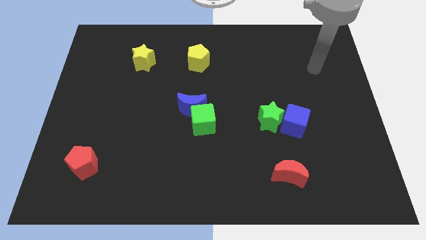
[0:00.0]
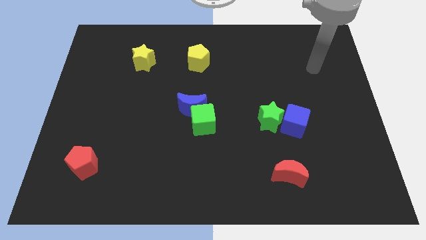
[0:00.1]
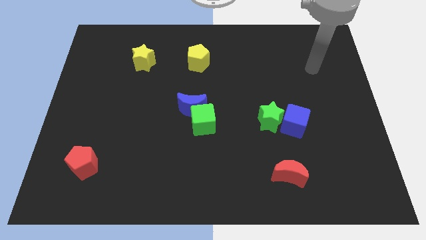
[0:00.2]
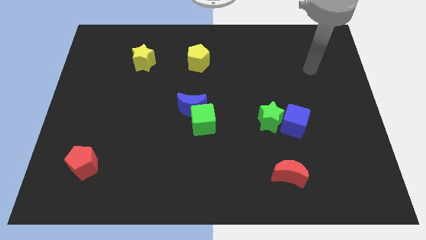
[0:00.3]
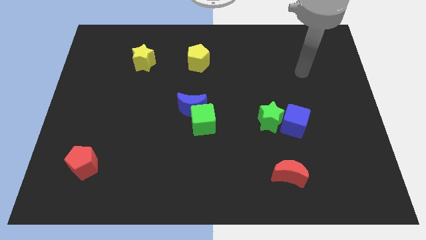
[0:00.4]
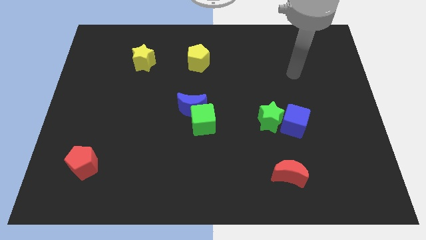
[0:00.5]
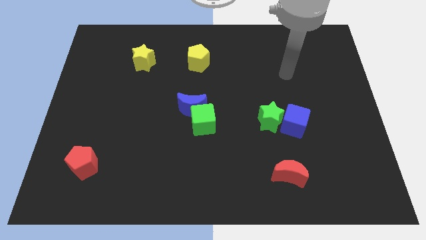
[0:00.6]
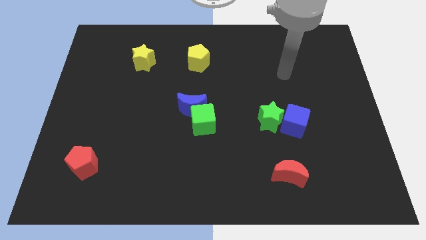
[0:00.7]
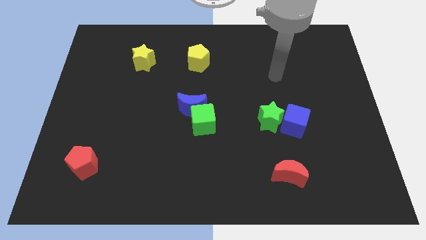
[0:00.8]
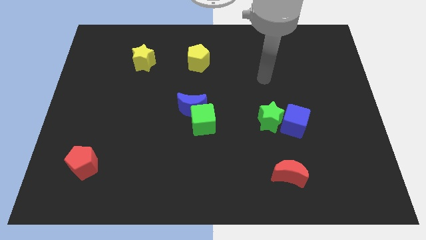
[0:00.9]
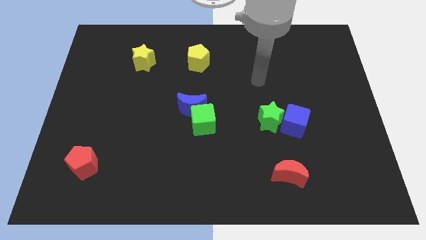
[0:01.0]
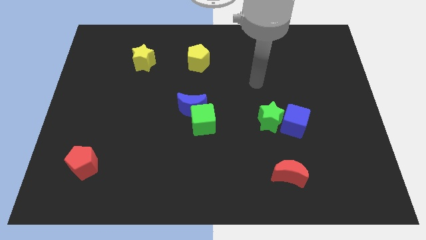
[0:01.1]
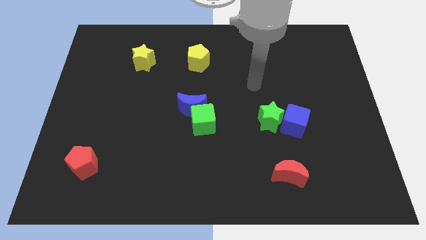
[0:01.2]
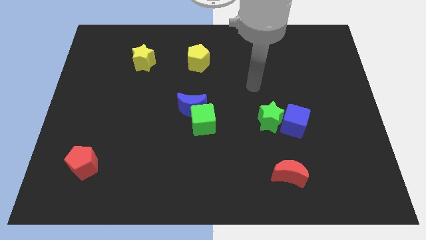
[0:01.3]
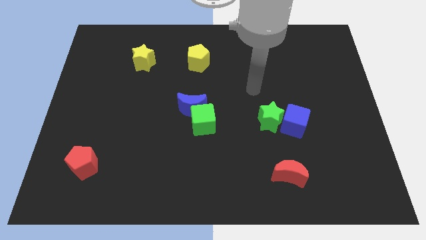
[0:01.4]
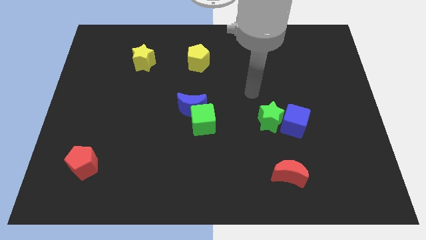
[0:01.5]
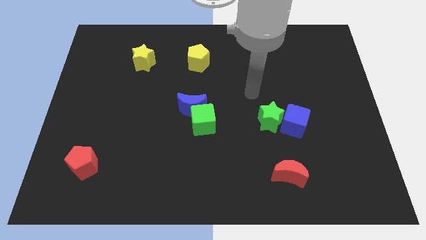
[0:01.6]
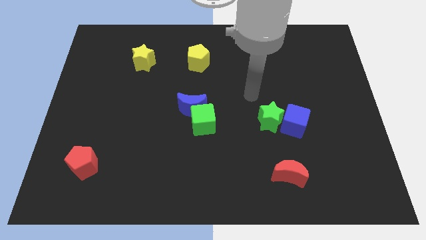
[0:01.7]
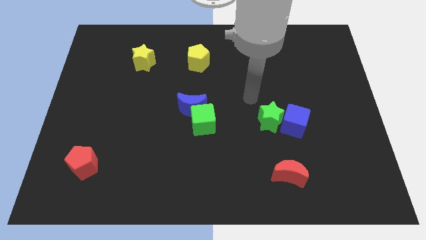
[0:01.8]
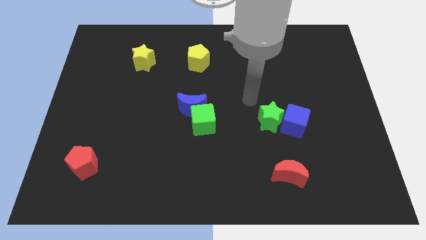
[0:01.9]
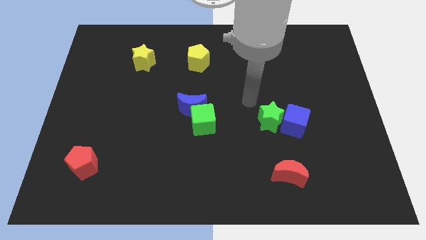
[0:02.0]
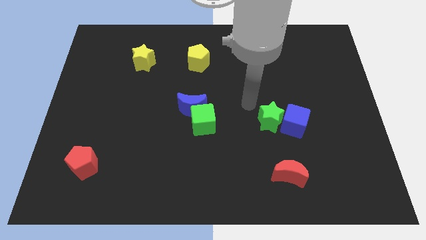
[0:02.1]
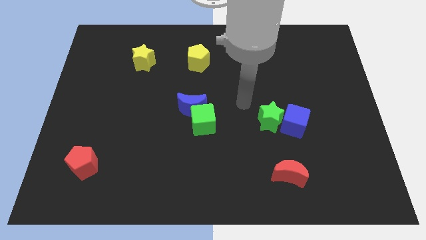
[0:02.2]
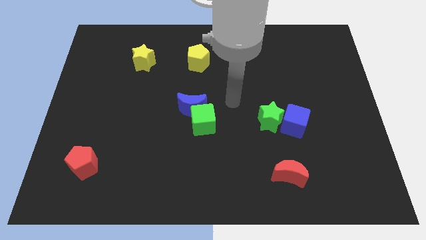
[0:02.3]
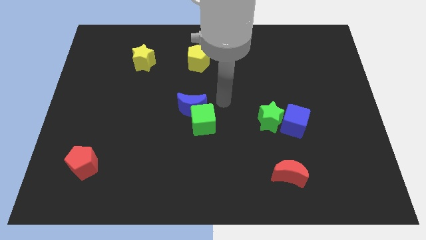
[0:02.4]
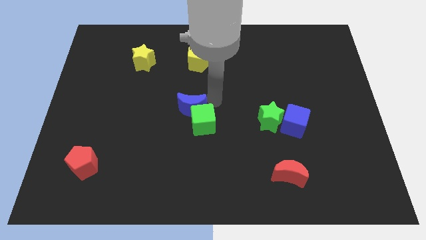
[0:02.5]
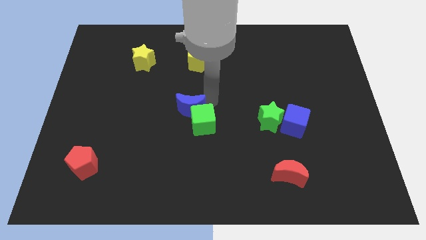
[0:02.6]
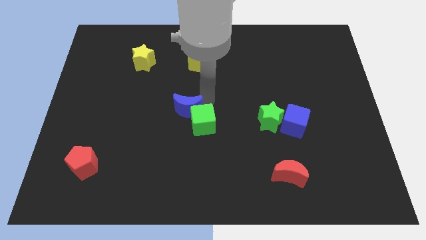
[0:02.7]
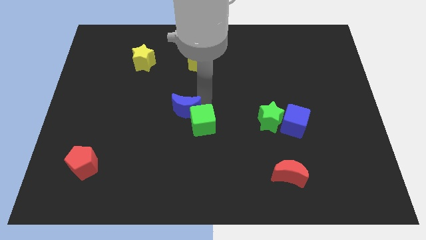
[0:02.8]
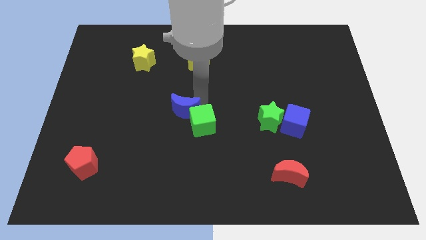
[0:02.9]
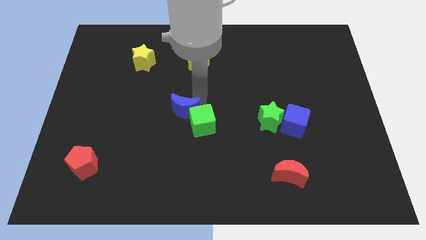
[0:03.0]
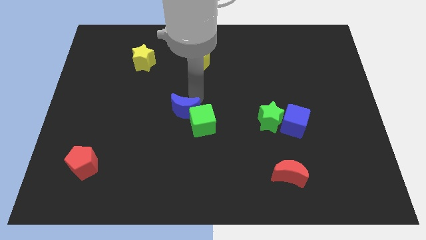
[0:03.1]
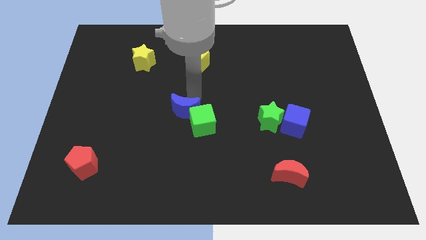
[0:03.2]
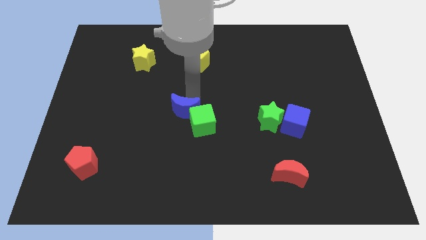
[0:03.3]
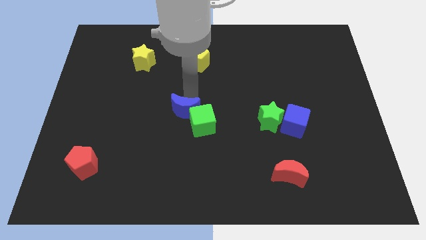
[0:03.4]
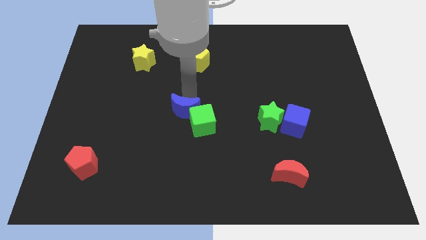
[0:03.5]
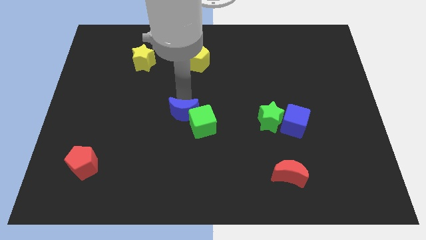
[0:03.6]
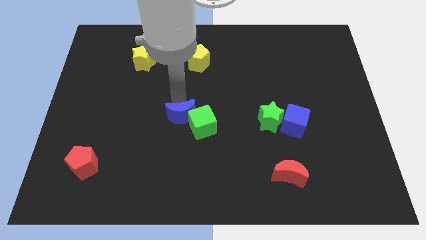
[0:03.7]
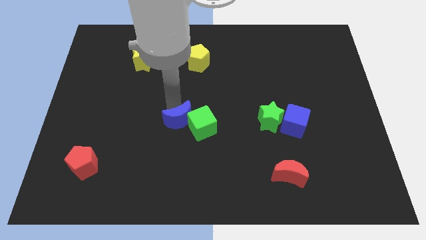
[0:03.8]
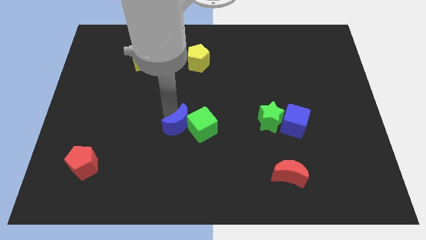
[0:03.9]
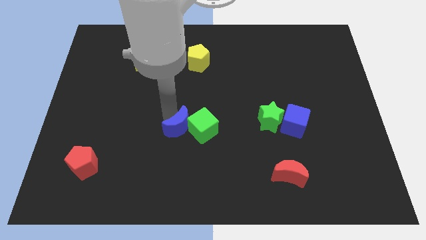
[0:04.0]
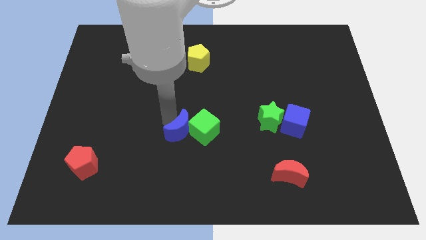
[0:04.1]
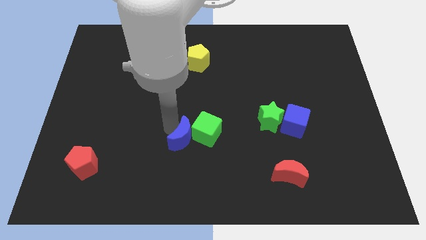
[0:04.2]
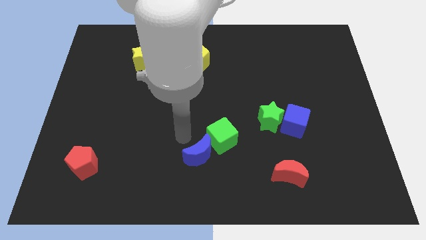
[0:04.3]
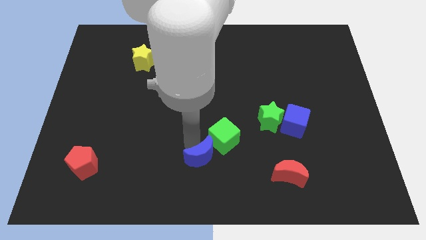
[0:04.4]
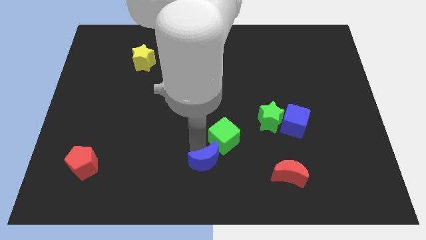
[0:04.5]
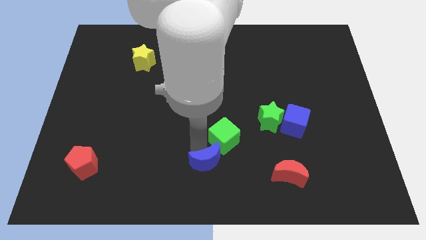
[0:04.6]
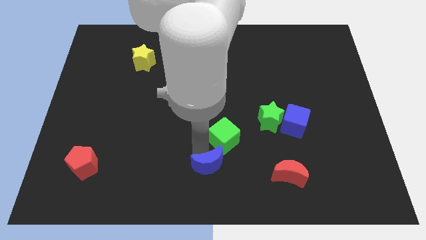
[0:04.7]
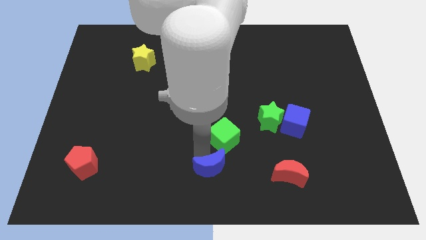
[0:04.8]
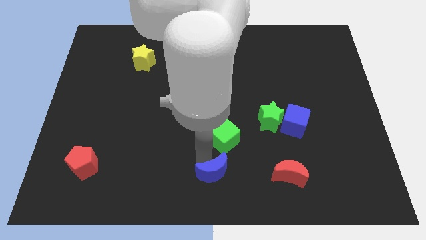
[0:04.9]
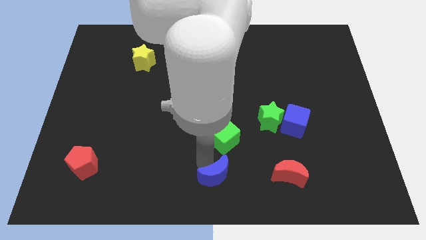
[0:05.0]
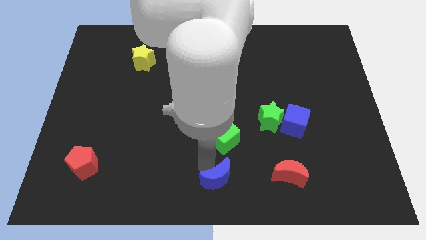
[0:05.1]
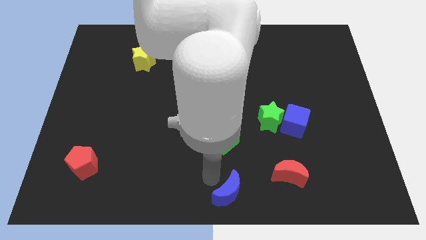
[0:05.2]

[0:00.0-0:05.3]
move the blue moon to the bottom side of the green cube

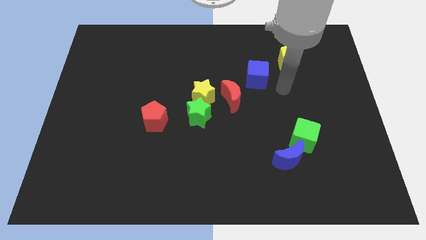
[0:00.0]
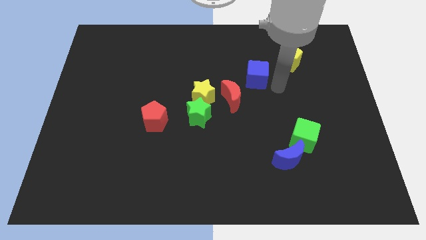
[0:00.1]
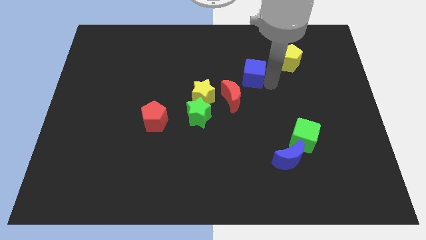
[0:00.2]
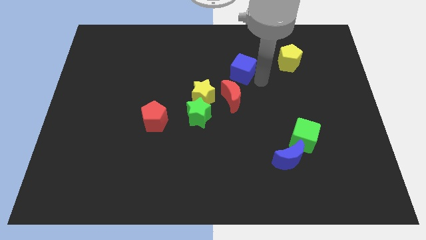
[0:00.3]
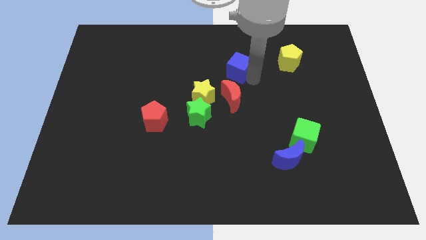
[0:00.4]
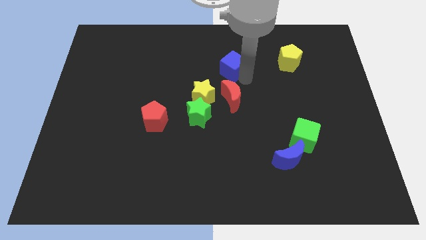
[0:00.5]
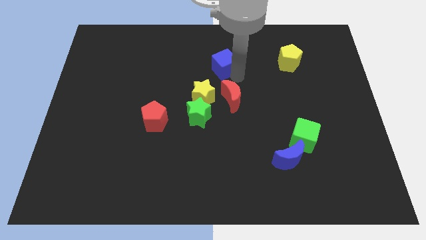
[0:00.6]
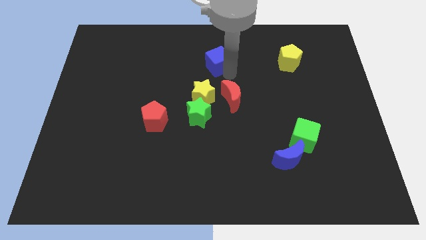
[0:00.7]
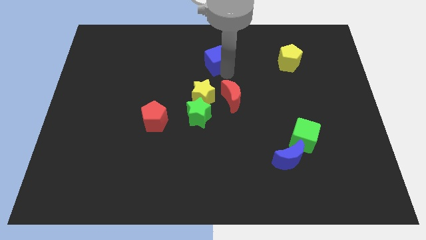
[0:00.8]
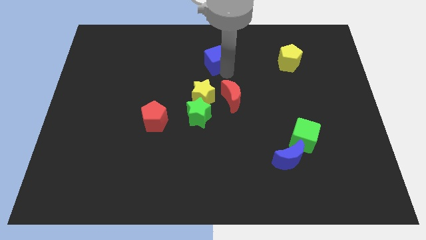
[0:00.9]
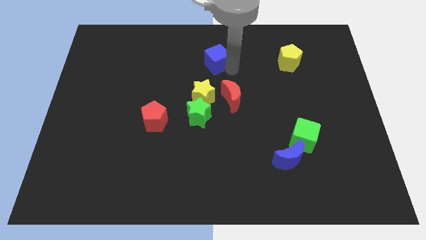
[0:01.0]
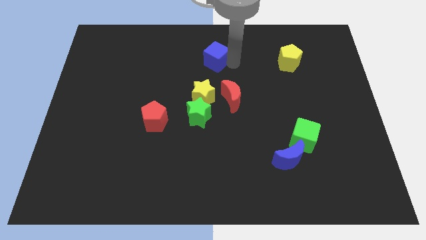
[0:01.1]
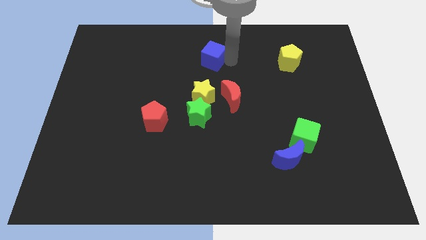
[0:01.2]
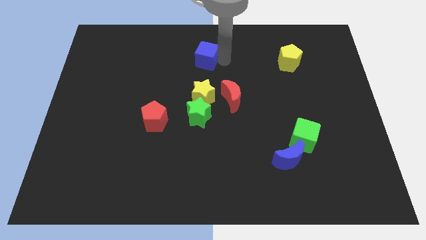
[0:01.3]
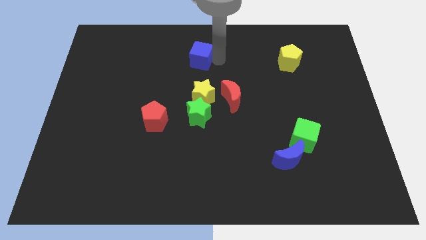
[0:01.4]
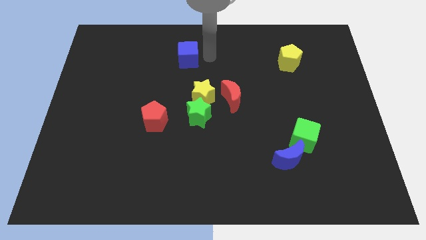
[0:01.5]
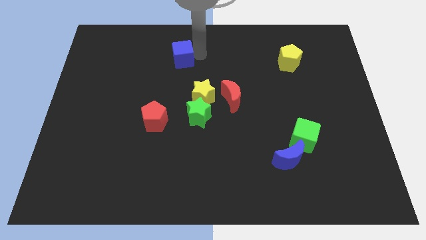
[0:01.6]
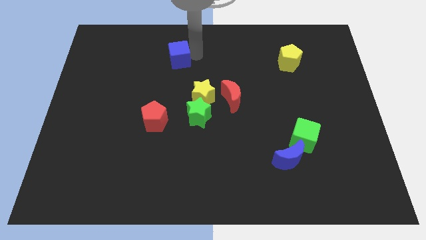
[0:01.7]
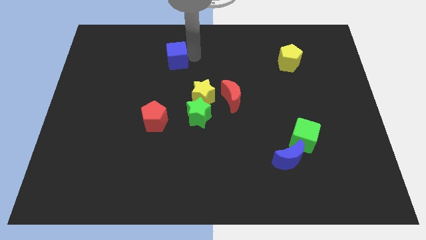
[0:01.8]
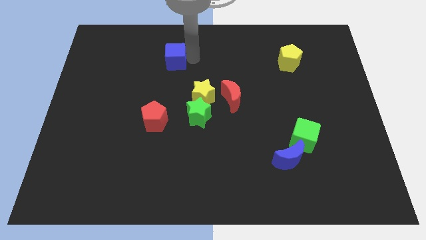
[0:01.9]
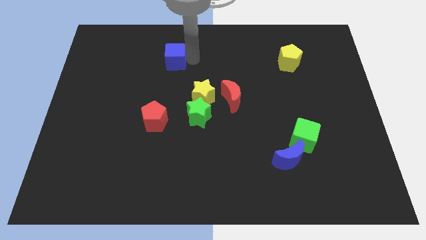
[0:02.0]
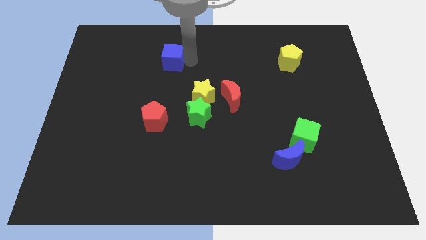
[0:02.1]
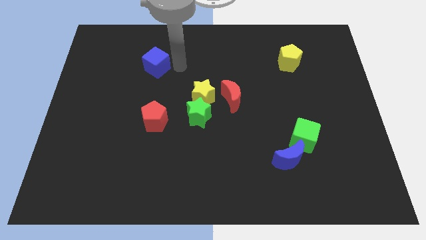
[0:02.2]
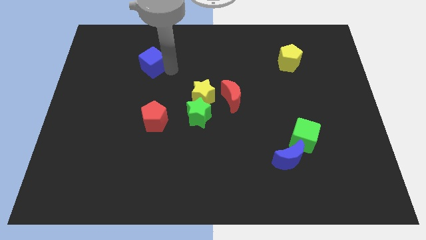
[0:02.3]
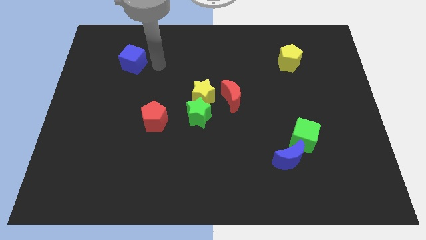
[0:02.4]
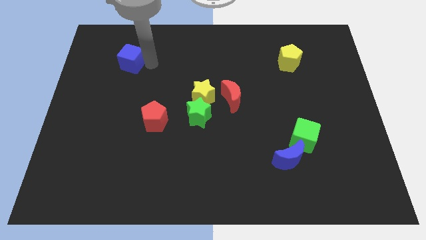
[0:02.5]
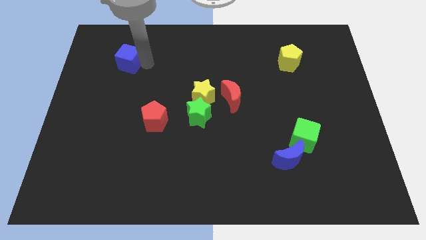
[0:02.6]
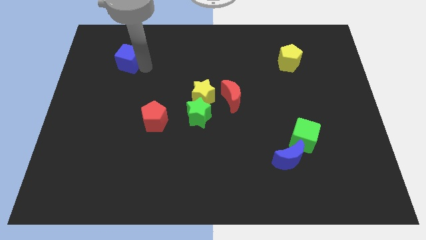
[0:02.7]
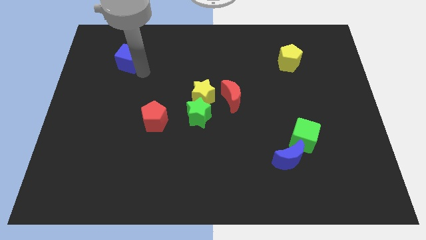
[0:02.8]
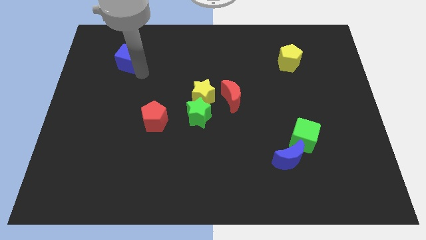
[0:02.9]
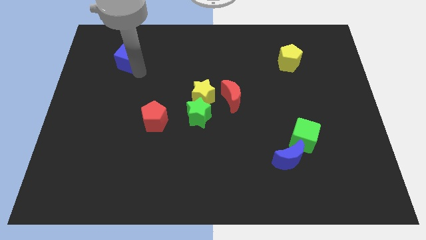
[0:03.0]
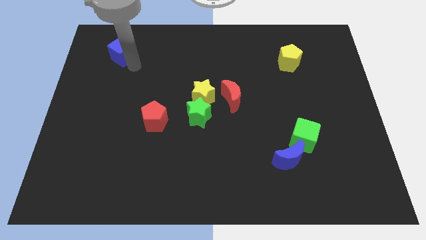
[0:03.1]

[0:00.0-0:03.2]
put the blue cube at the top left side of the red pentagon

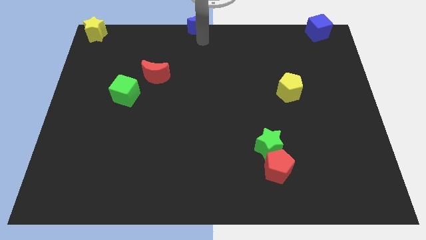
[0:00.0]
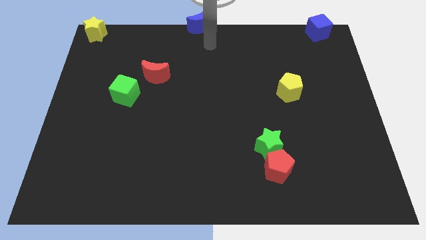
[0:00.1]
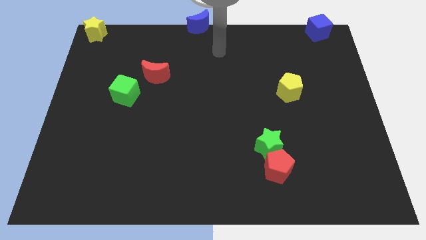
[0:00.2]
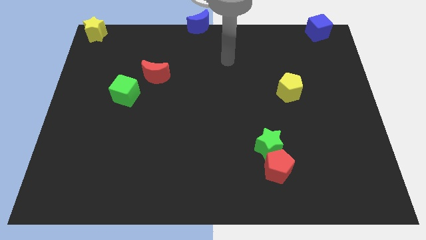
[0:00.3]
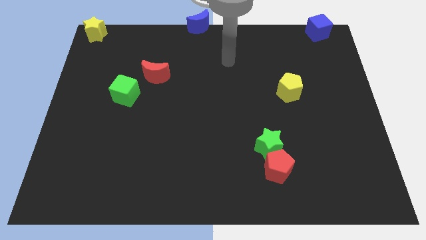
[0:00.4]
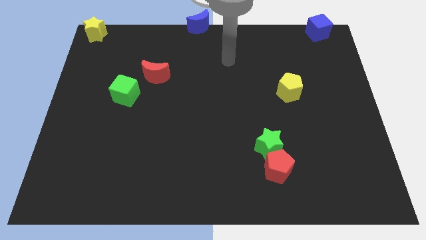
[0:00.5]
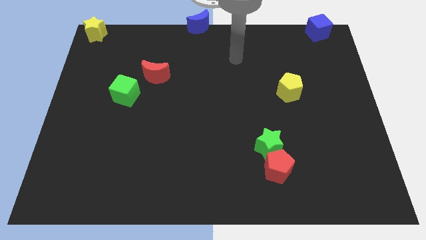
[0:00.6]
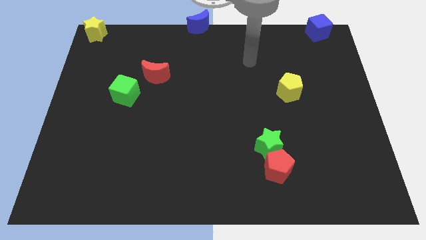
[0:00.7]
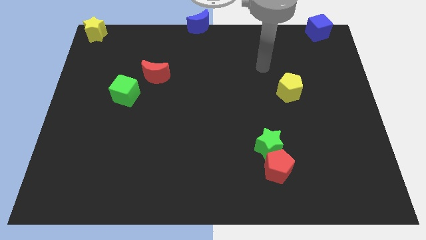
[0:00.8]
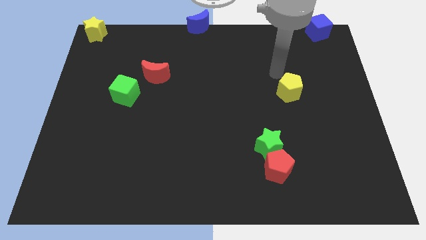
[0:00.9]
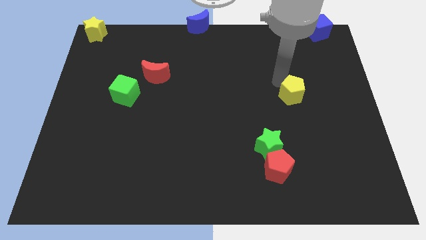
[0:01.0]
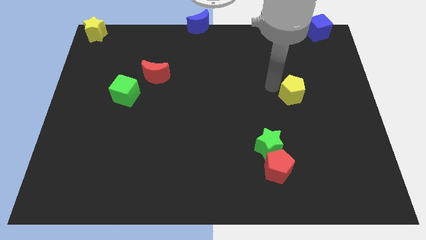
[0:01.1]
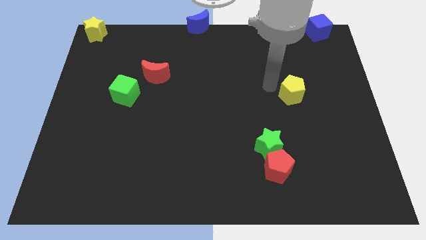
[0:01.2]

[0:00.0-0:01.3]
slightly touch the yellow pentagon
